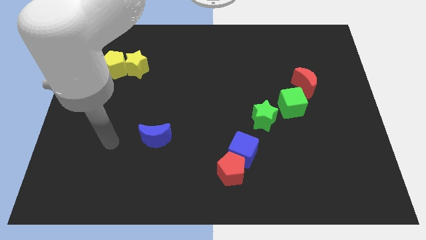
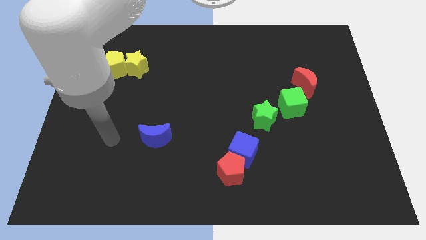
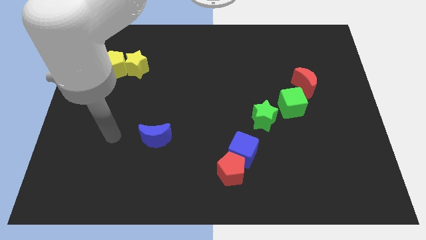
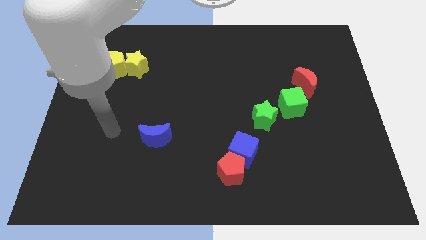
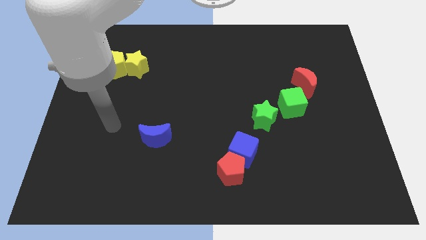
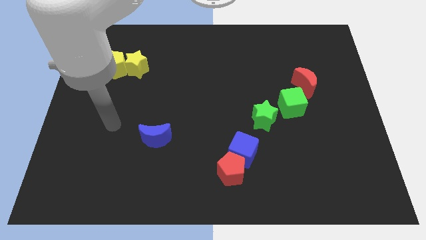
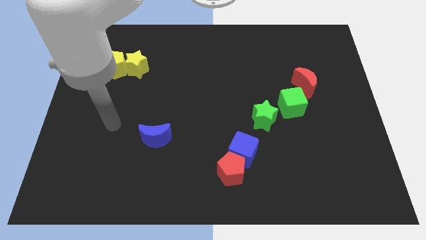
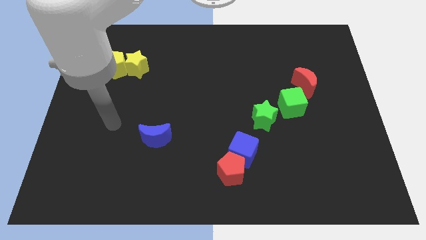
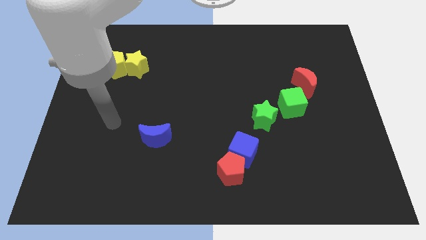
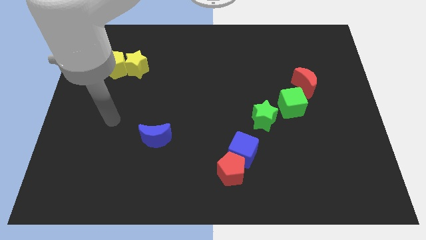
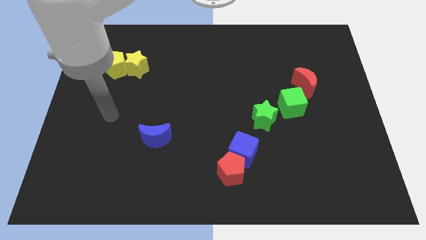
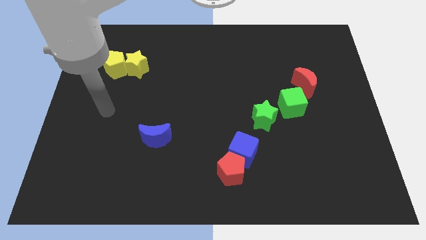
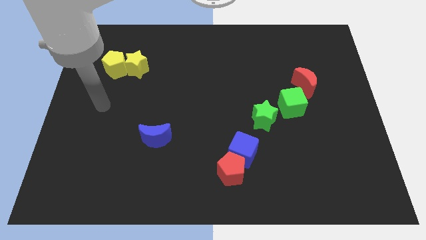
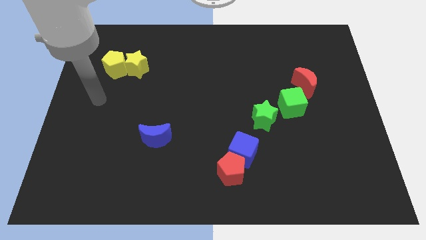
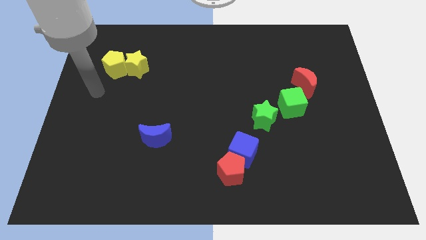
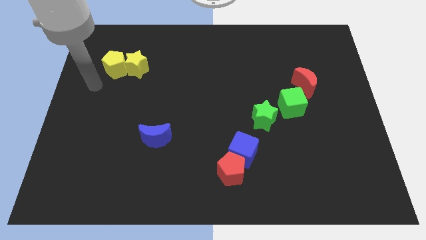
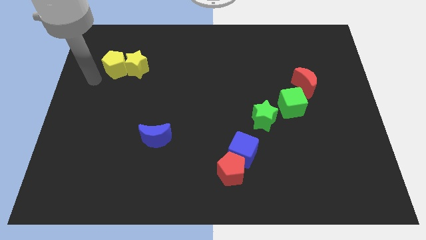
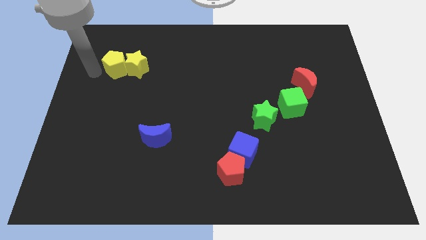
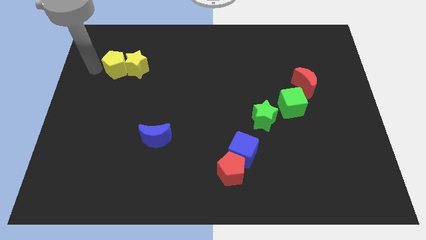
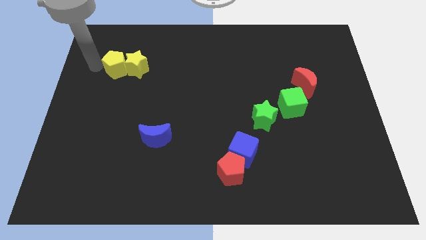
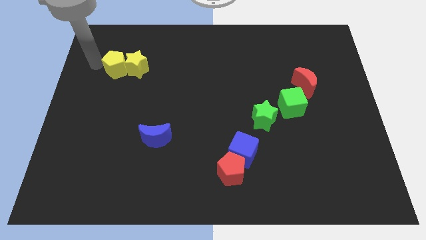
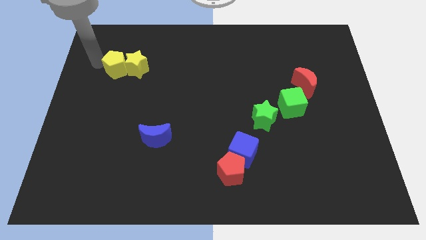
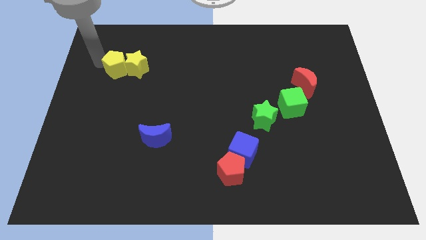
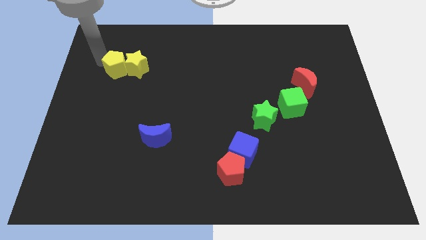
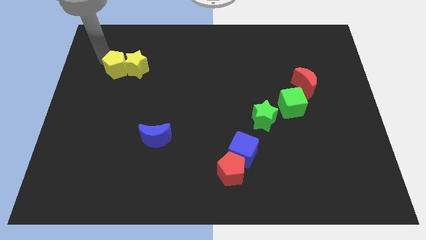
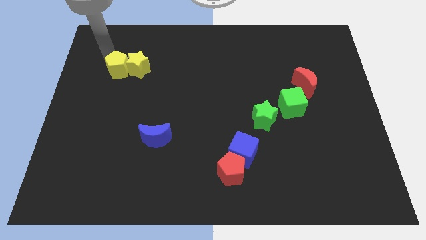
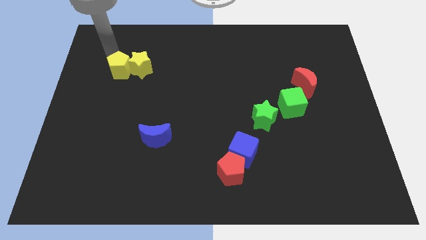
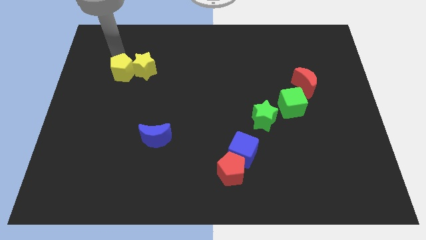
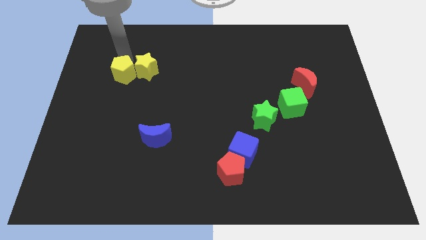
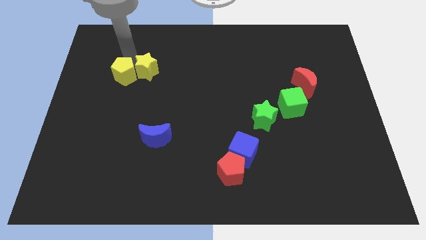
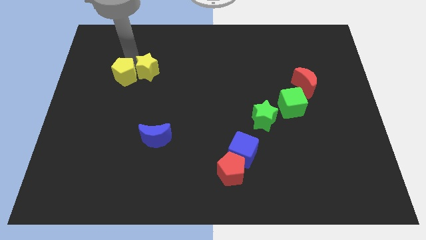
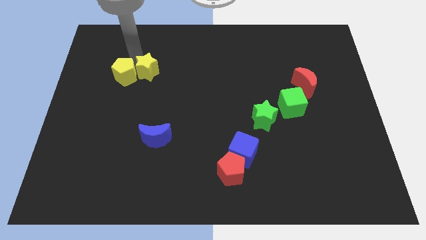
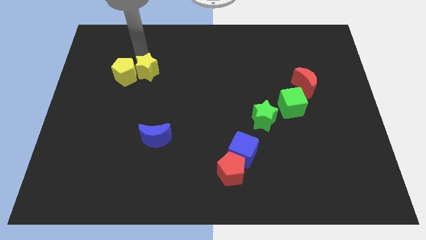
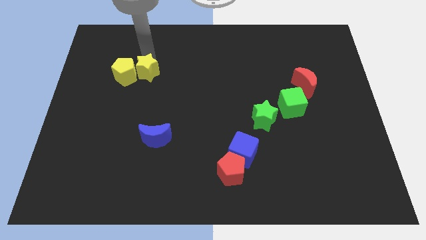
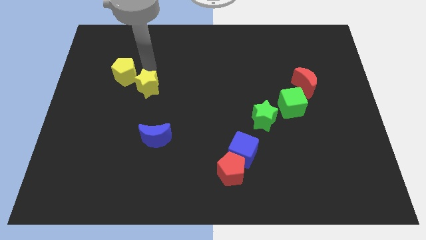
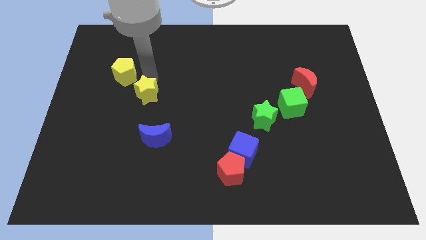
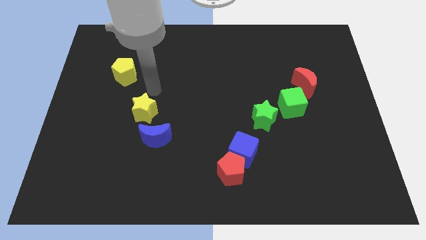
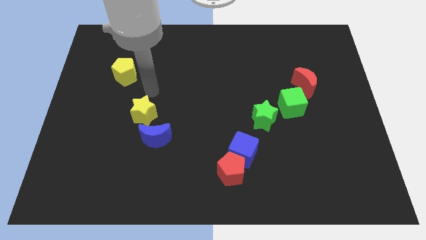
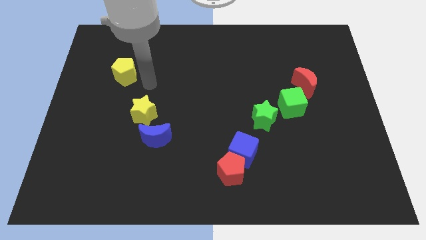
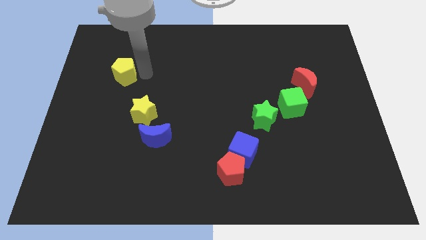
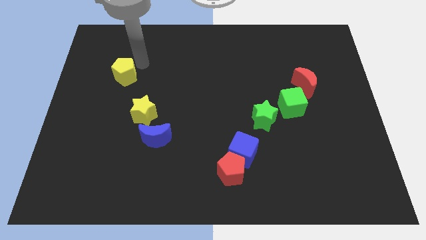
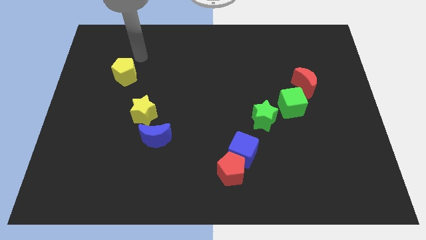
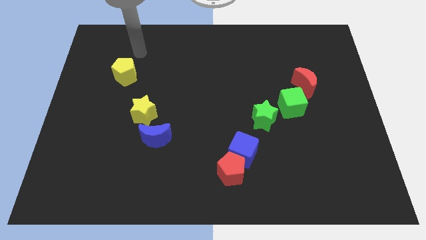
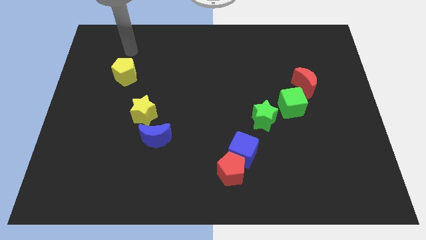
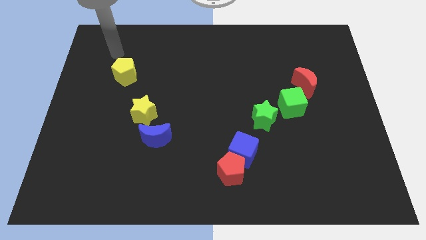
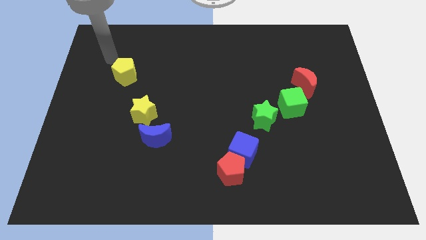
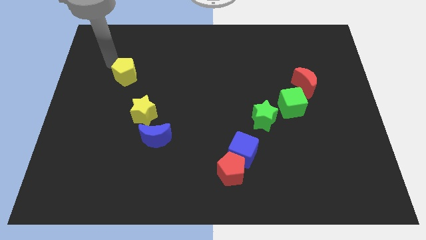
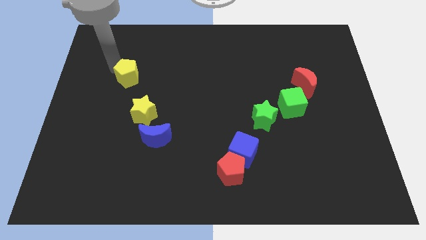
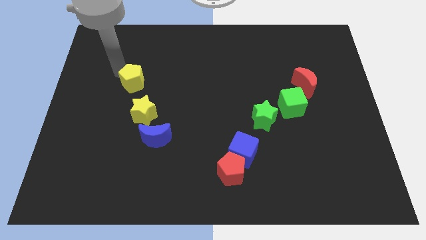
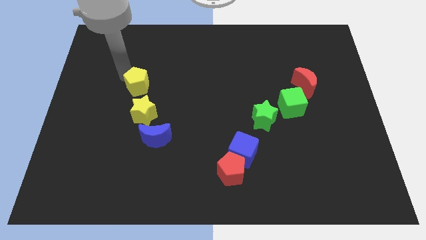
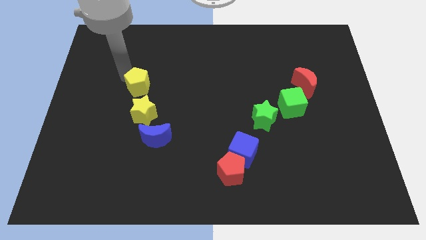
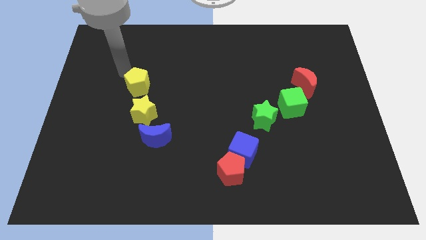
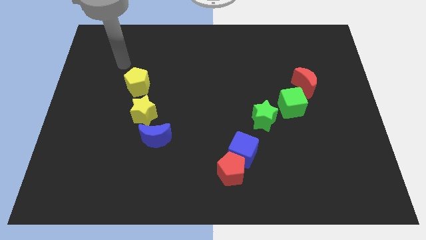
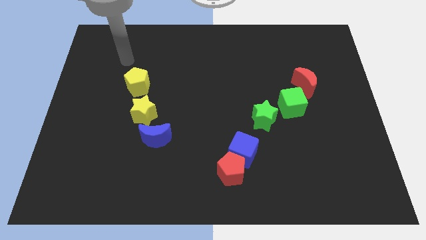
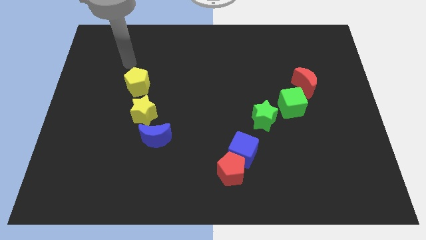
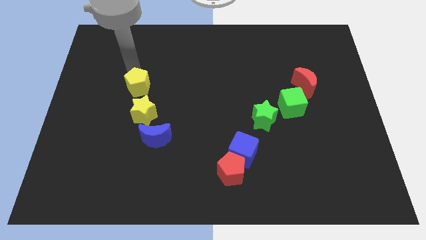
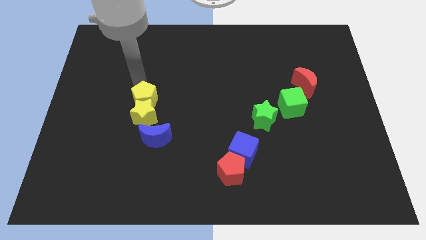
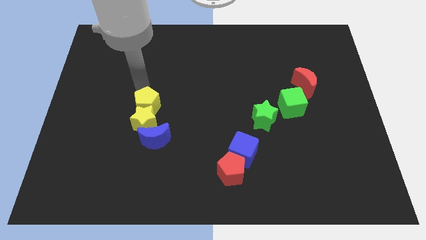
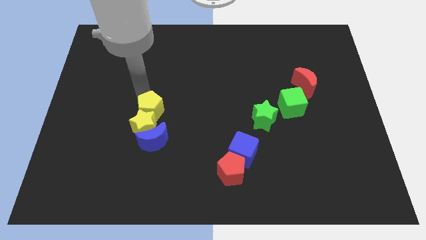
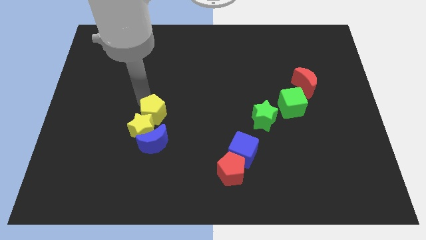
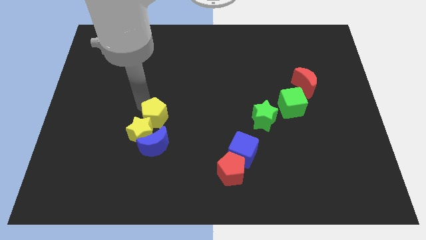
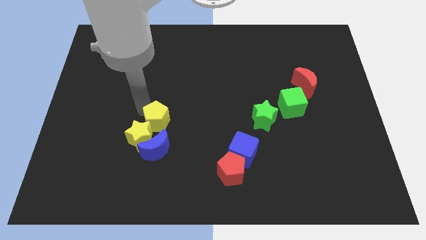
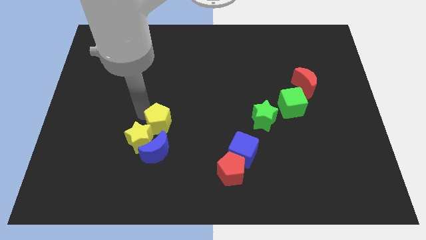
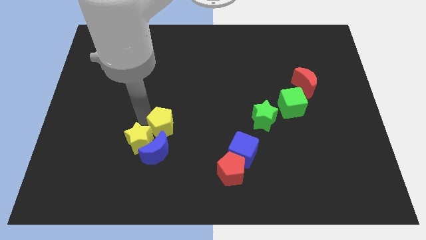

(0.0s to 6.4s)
move yellow star and the yellow pentagon into the blue moon

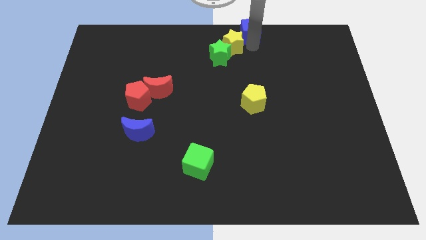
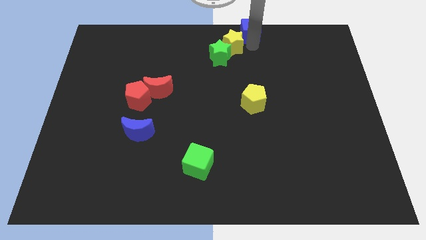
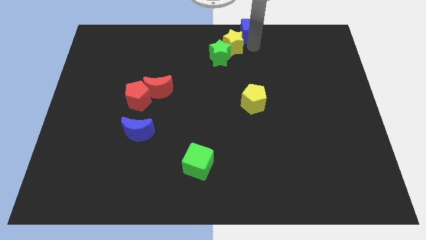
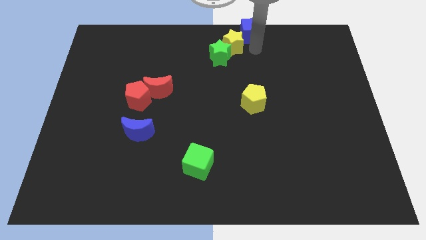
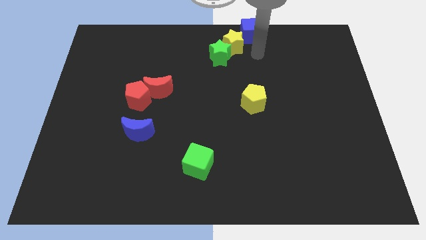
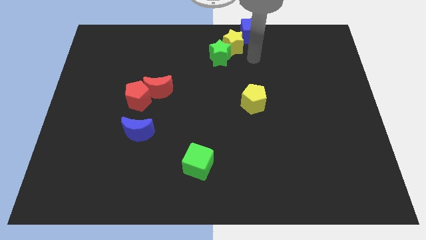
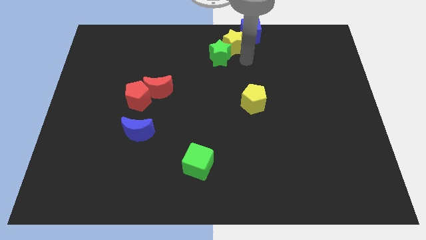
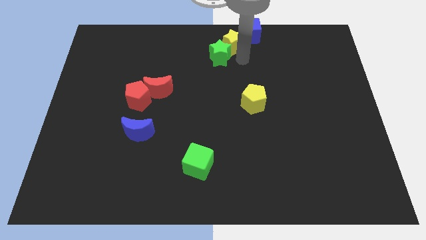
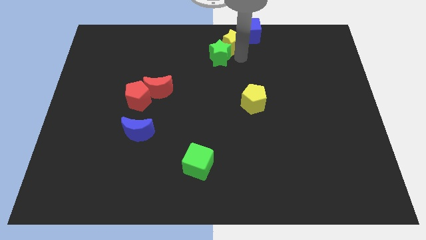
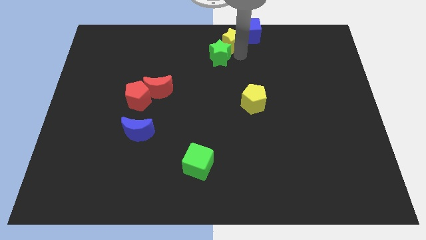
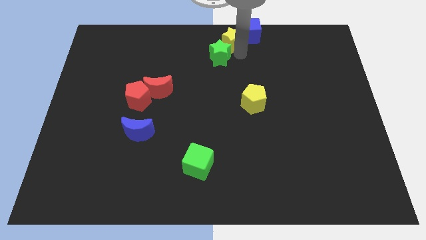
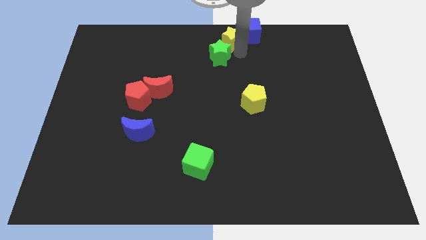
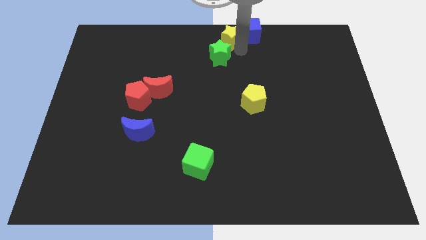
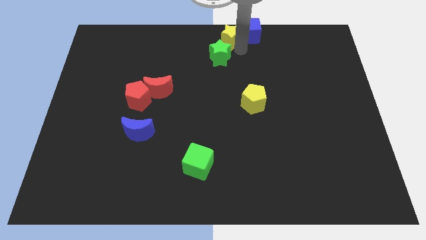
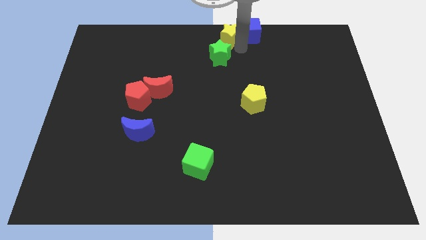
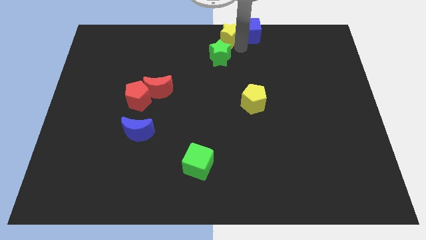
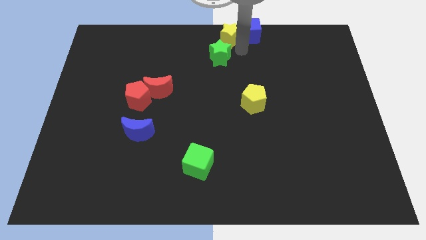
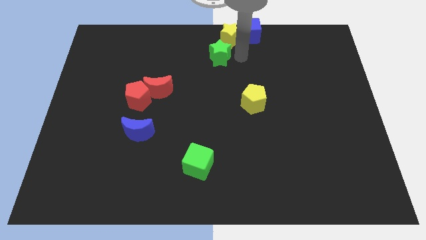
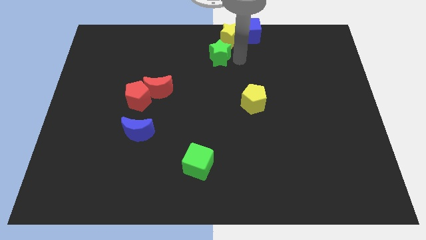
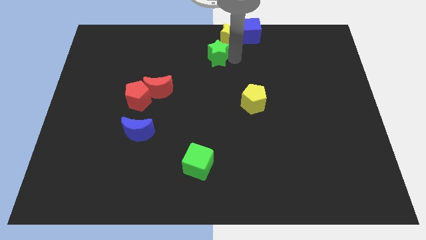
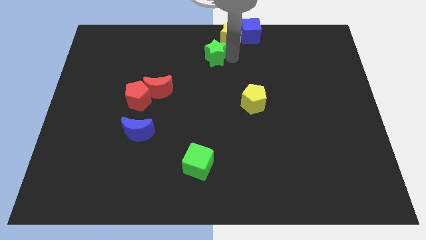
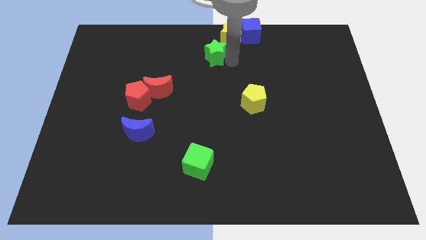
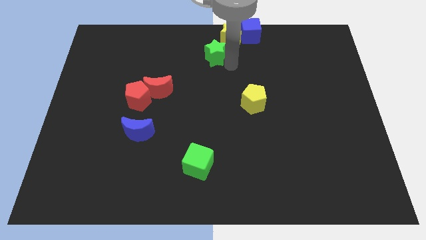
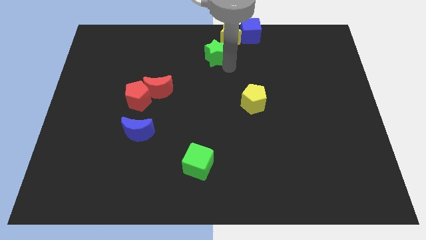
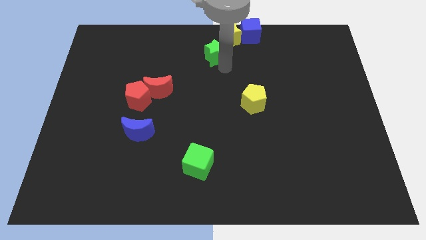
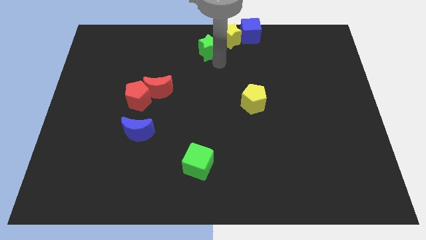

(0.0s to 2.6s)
move the yellow star left to the blue cube

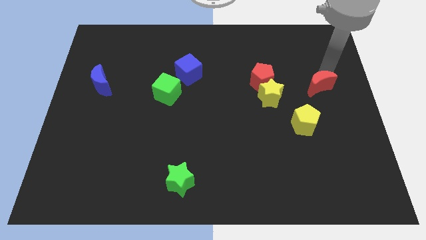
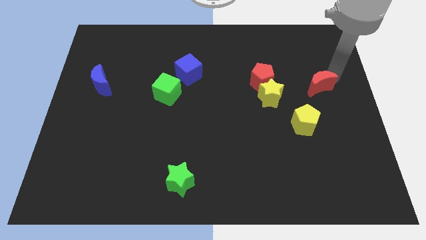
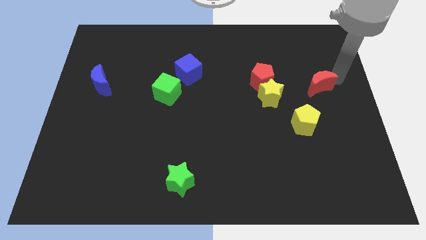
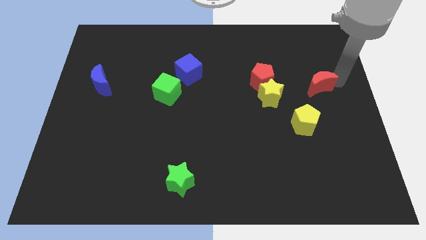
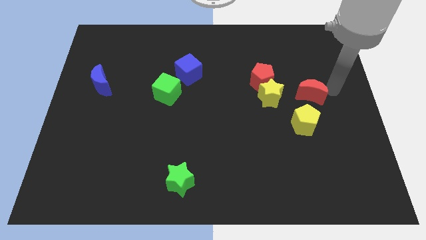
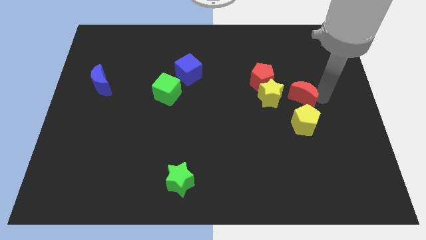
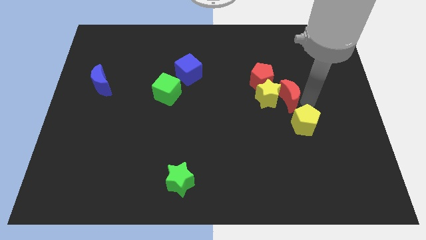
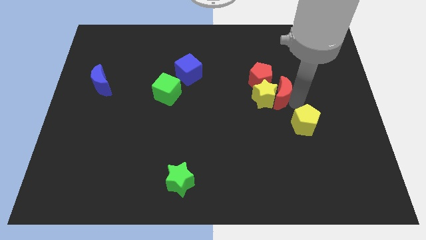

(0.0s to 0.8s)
push the red crescent into the right side of the yellow star
